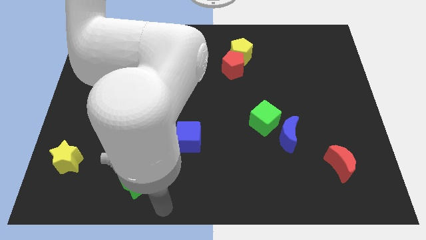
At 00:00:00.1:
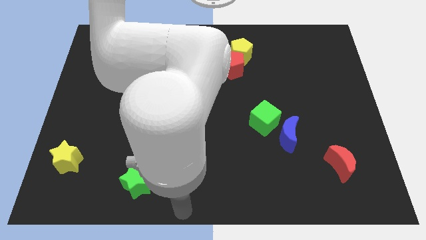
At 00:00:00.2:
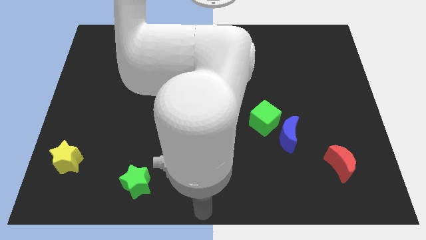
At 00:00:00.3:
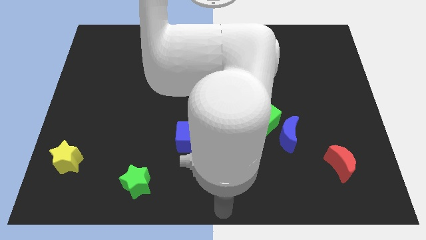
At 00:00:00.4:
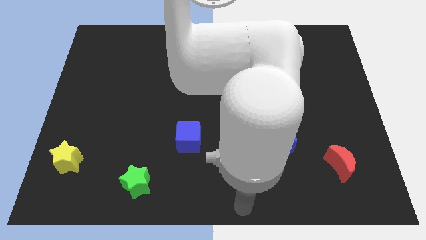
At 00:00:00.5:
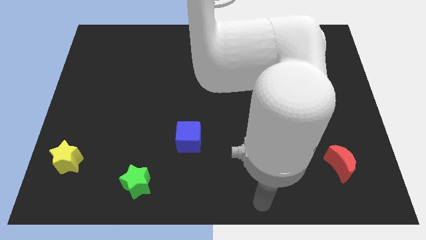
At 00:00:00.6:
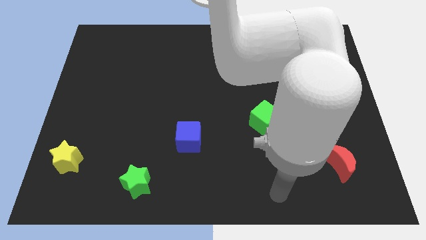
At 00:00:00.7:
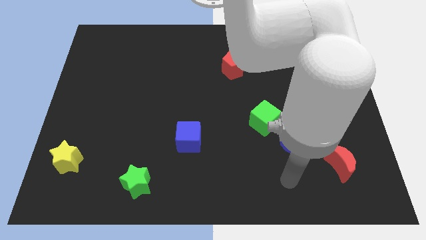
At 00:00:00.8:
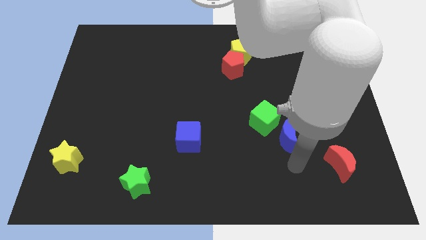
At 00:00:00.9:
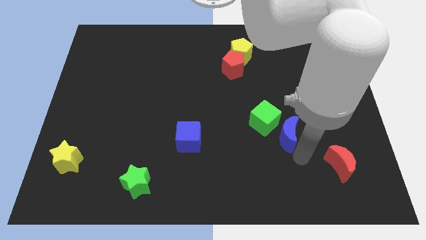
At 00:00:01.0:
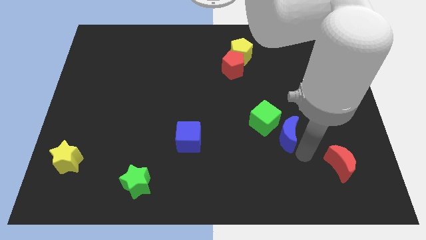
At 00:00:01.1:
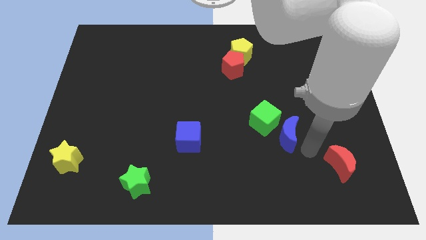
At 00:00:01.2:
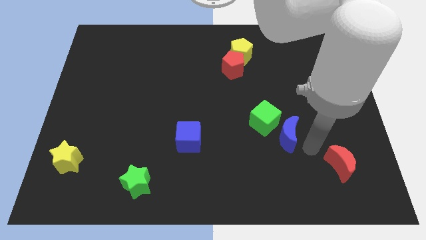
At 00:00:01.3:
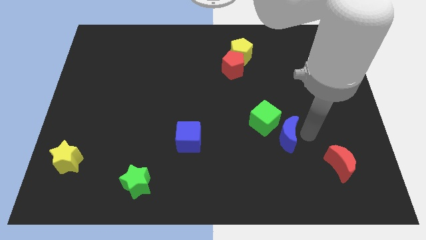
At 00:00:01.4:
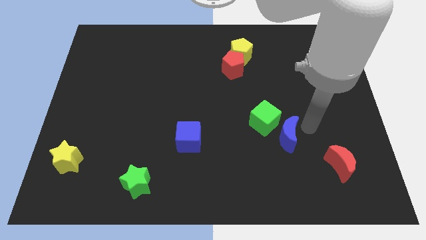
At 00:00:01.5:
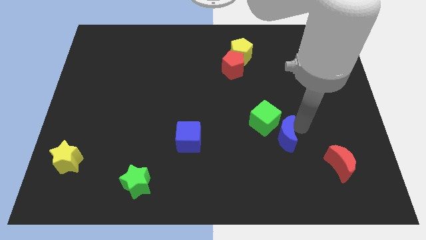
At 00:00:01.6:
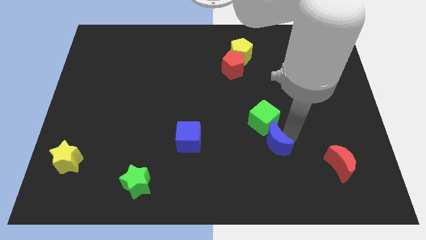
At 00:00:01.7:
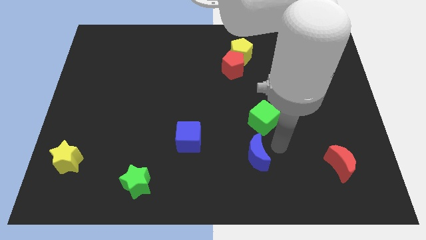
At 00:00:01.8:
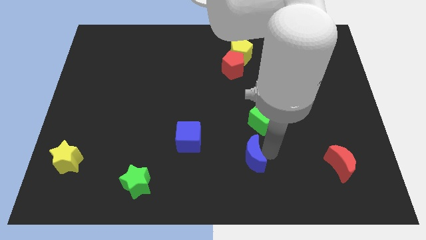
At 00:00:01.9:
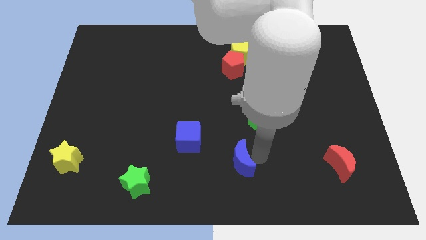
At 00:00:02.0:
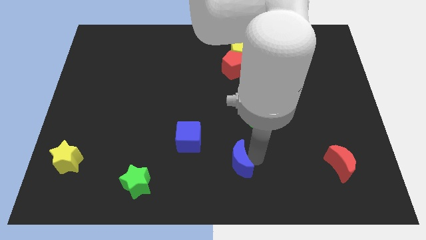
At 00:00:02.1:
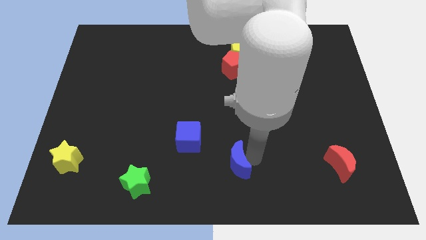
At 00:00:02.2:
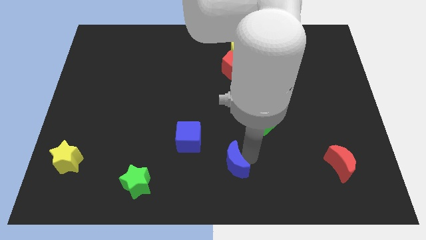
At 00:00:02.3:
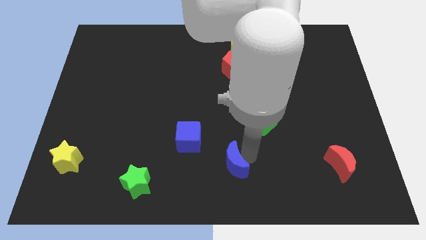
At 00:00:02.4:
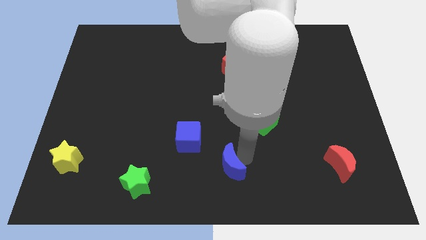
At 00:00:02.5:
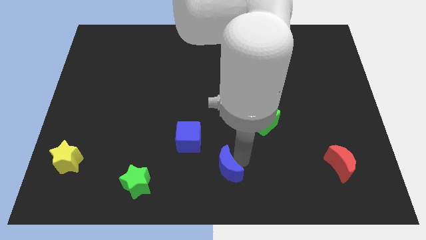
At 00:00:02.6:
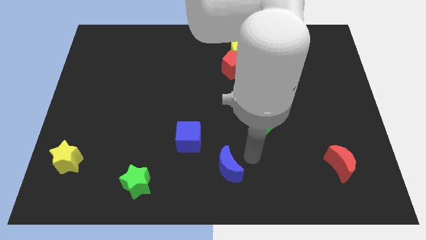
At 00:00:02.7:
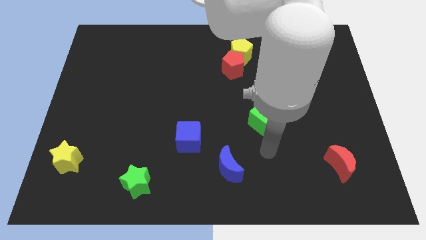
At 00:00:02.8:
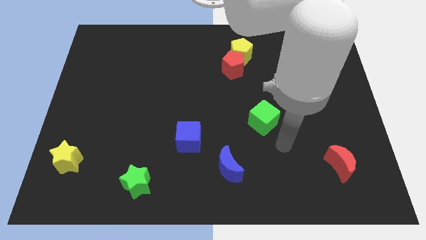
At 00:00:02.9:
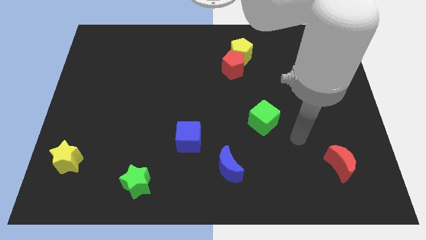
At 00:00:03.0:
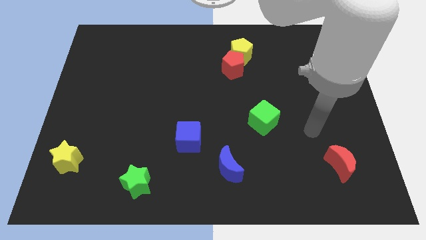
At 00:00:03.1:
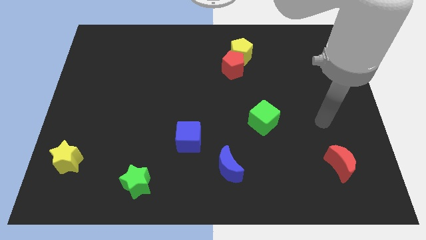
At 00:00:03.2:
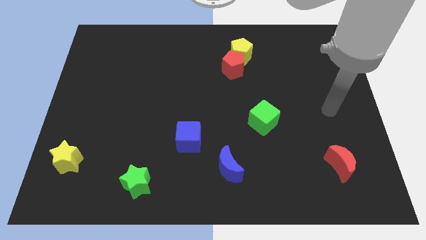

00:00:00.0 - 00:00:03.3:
place the blue moon diagonally to the blue cube
